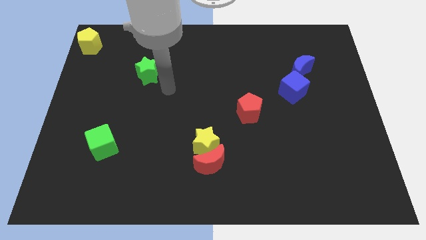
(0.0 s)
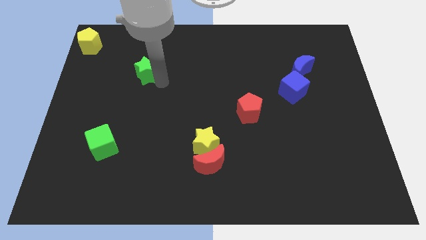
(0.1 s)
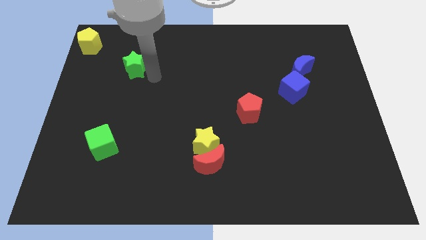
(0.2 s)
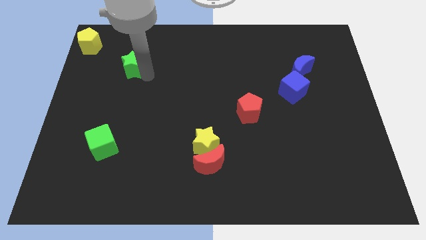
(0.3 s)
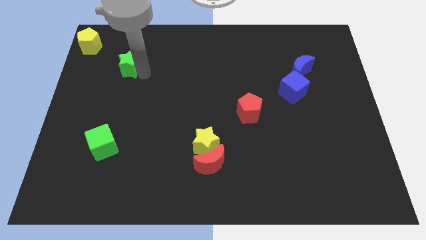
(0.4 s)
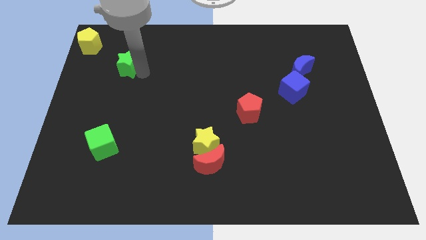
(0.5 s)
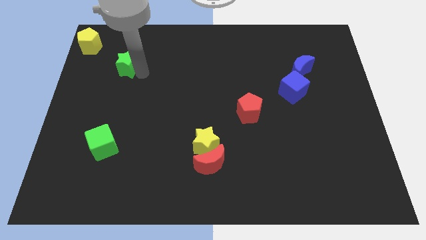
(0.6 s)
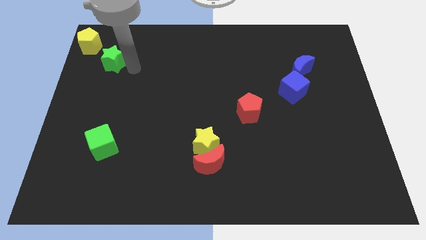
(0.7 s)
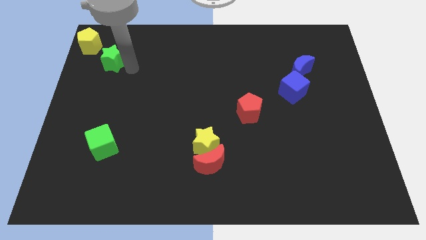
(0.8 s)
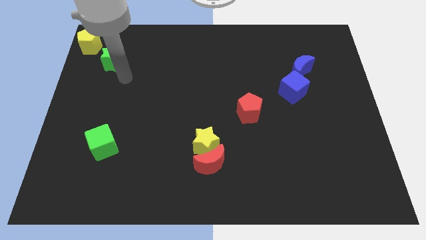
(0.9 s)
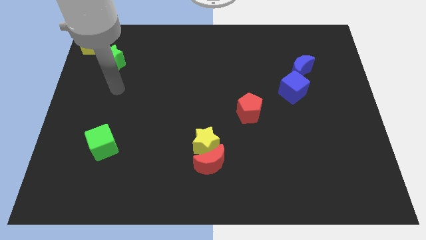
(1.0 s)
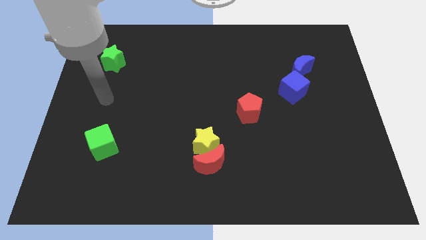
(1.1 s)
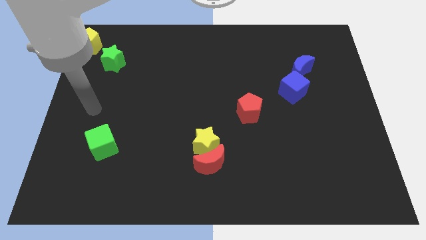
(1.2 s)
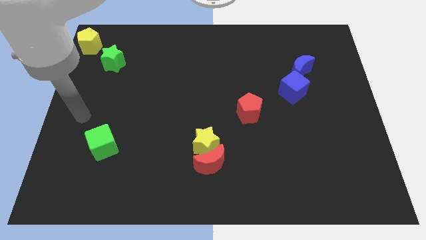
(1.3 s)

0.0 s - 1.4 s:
push the green star towards the yellow pentagon

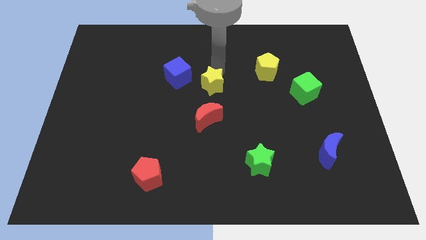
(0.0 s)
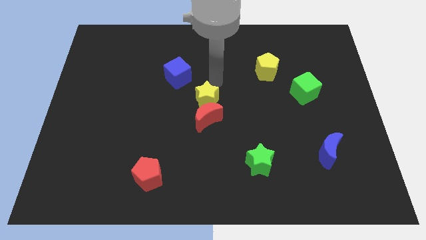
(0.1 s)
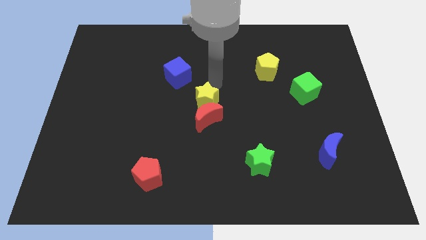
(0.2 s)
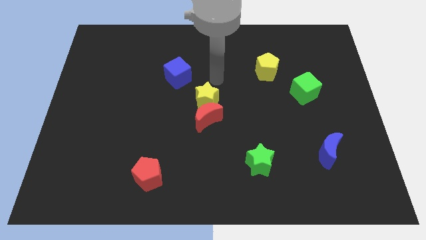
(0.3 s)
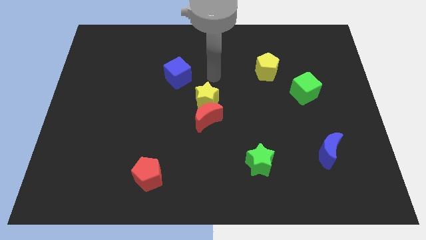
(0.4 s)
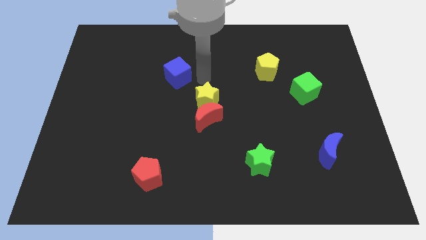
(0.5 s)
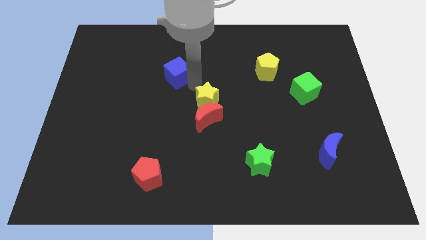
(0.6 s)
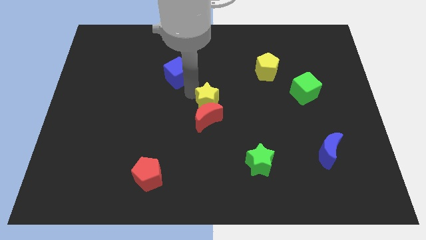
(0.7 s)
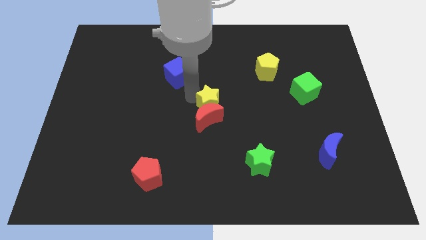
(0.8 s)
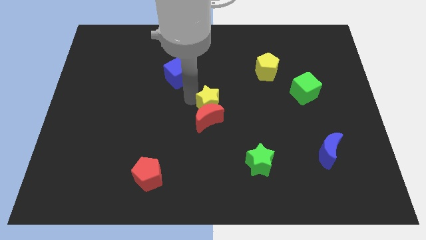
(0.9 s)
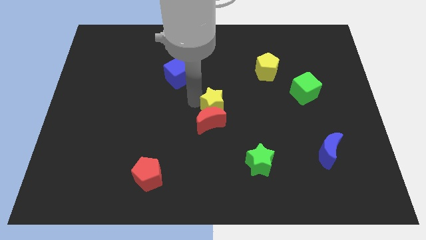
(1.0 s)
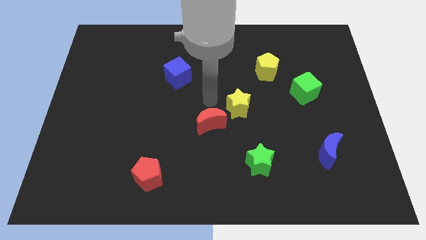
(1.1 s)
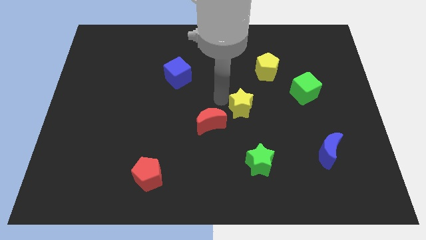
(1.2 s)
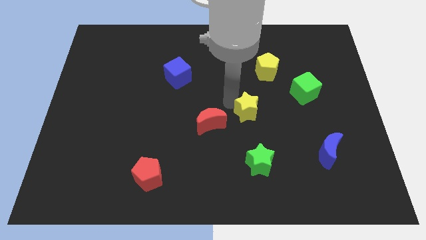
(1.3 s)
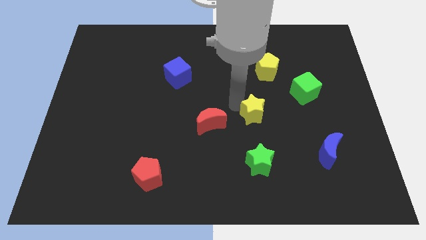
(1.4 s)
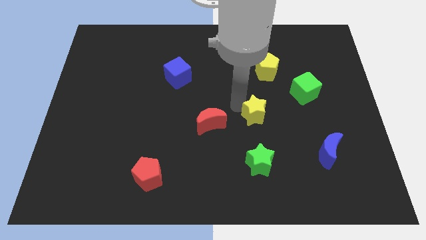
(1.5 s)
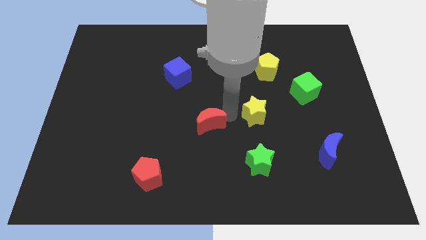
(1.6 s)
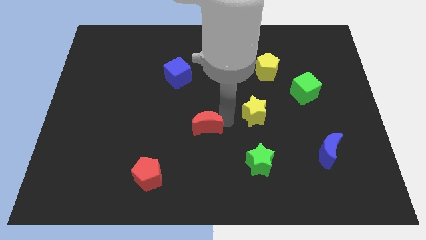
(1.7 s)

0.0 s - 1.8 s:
move yellow star right beside red moon

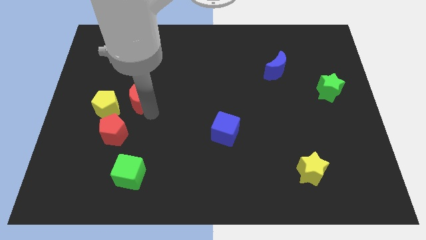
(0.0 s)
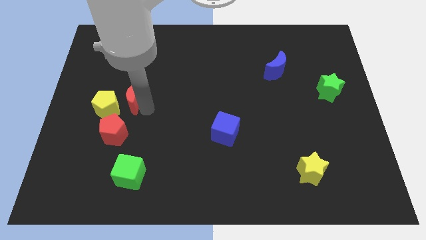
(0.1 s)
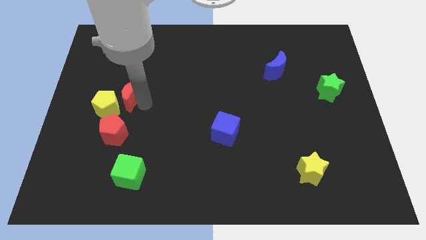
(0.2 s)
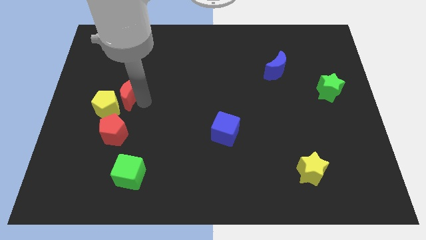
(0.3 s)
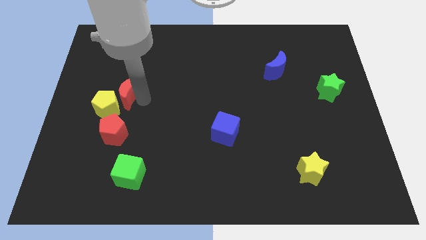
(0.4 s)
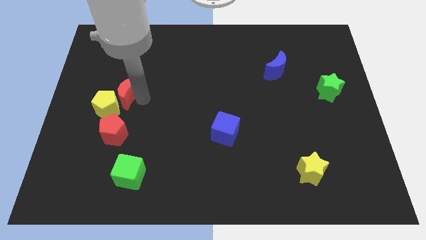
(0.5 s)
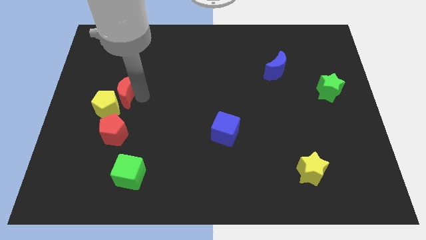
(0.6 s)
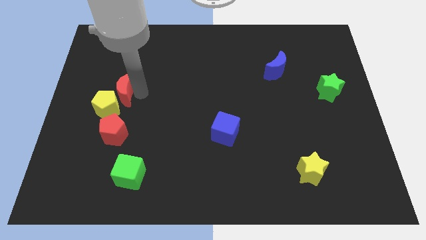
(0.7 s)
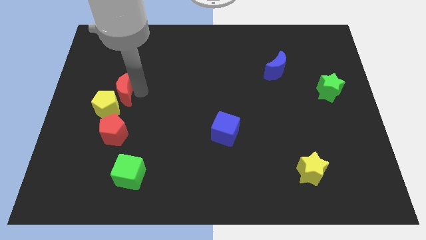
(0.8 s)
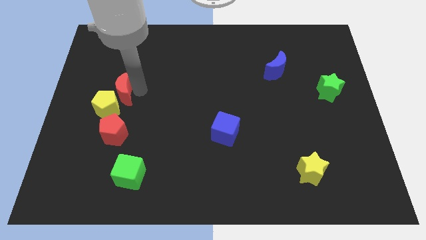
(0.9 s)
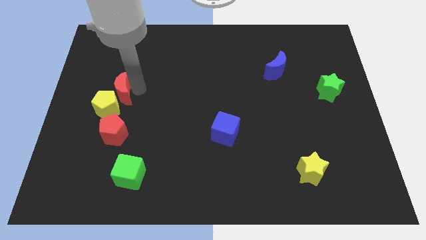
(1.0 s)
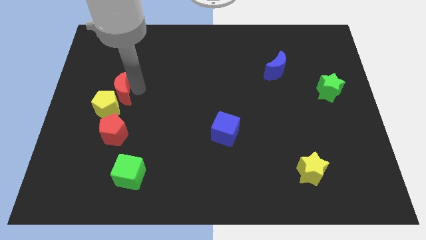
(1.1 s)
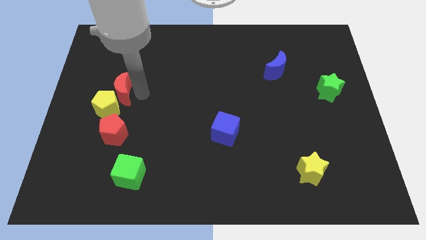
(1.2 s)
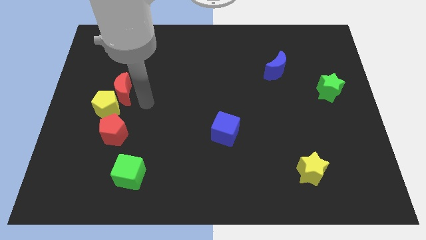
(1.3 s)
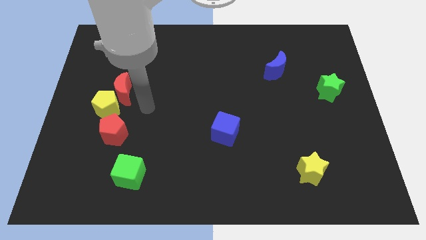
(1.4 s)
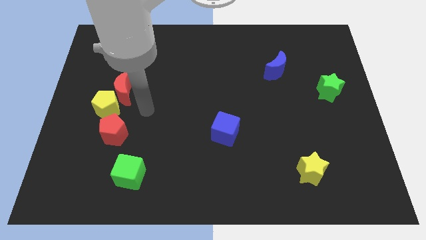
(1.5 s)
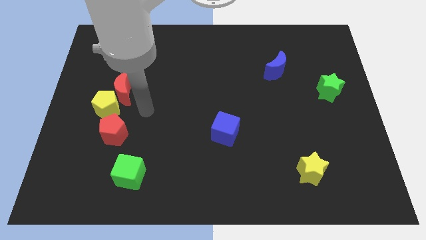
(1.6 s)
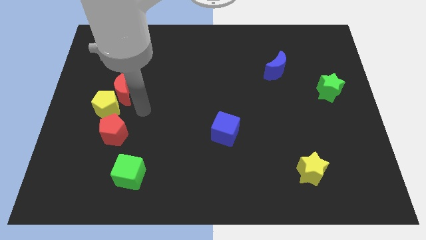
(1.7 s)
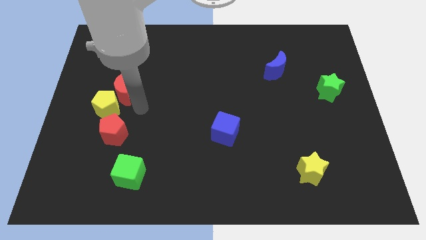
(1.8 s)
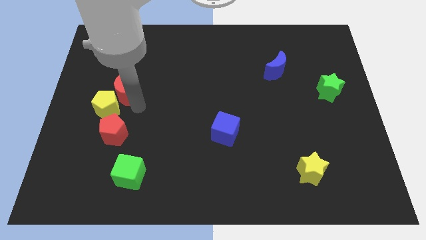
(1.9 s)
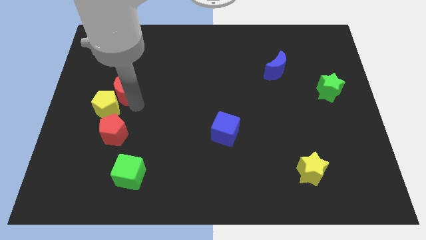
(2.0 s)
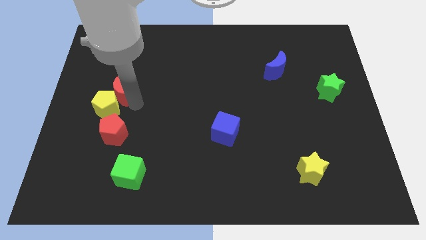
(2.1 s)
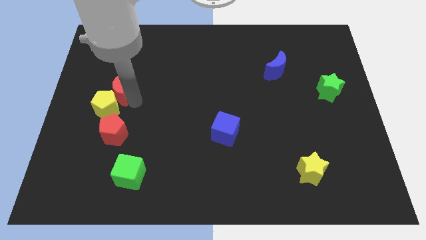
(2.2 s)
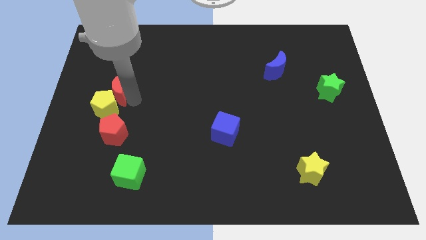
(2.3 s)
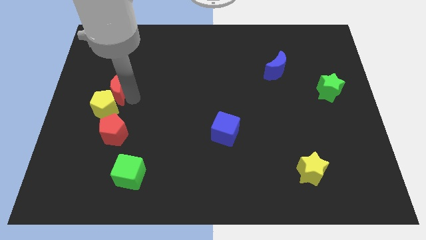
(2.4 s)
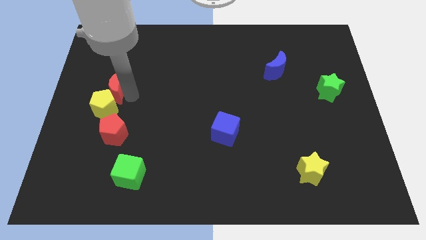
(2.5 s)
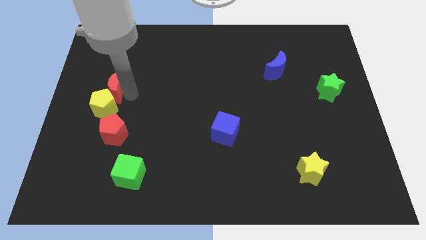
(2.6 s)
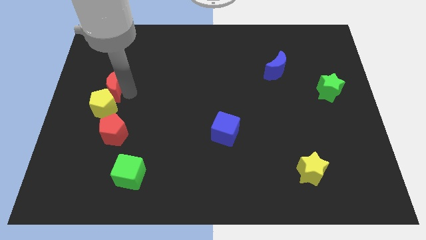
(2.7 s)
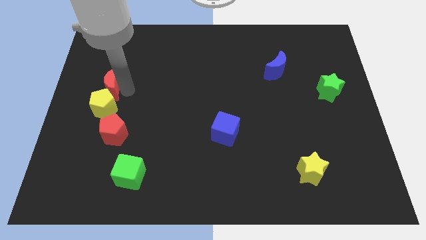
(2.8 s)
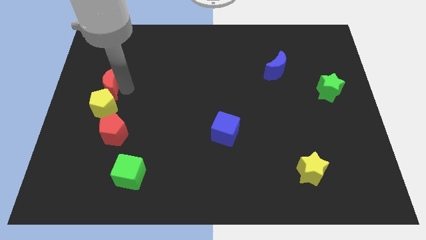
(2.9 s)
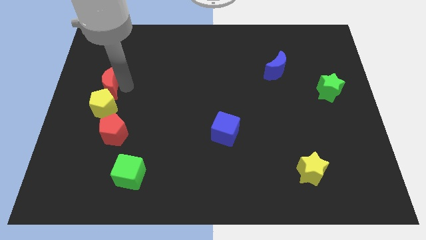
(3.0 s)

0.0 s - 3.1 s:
place the red crescent to the top of the yellow pentagon

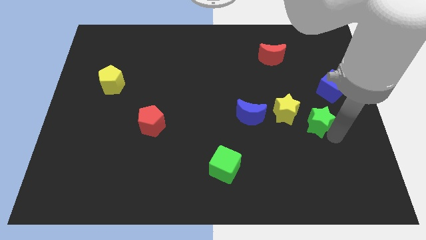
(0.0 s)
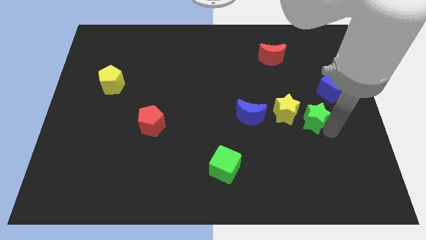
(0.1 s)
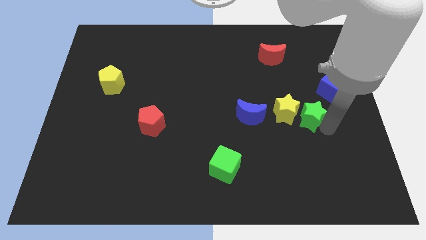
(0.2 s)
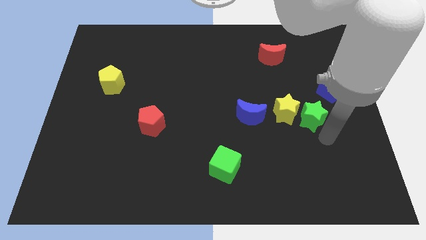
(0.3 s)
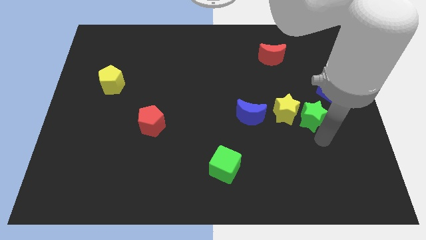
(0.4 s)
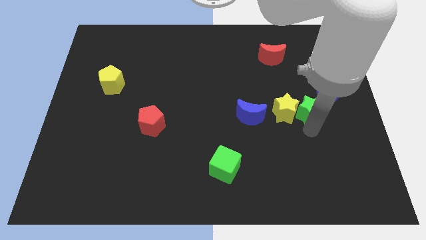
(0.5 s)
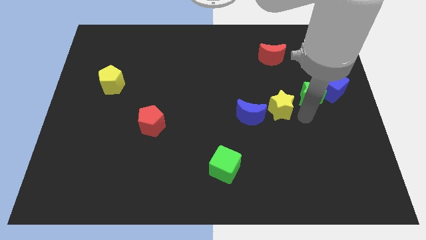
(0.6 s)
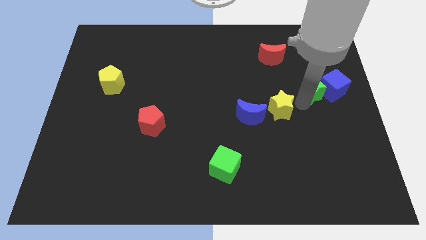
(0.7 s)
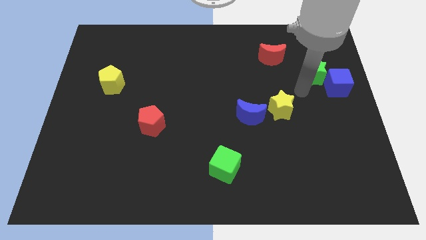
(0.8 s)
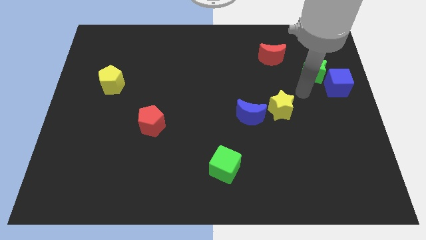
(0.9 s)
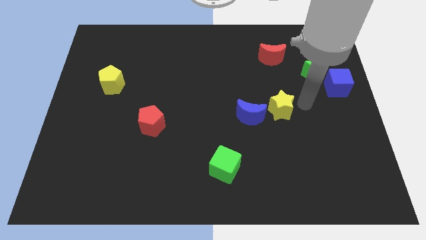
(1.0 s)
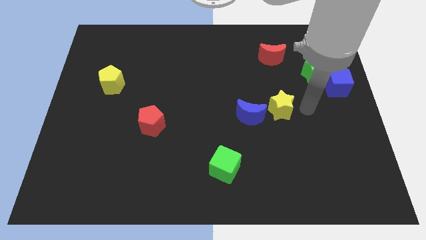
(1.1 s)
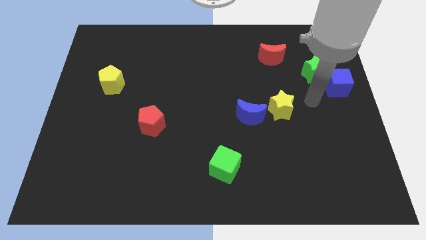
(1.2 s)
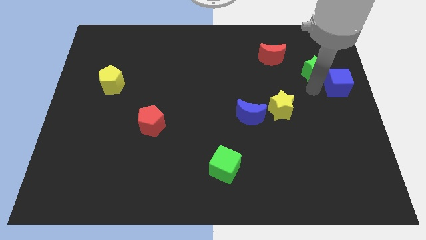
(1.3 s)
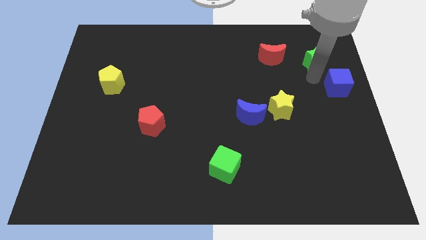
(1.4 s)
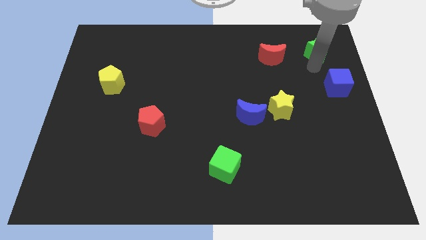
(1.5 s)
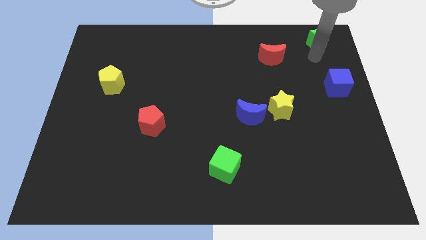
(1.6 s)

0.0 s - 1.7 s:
place the green star to the right of the red crescent

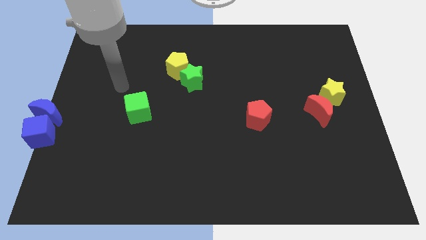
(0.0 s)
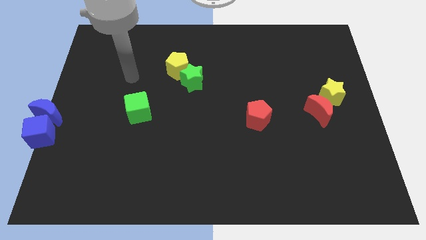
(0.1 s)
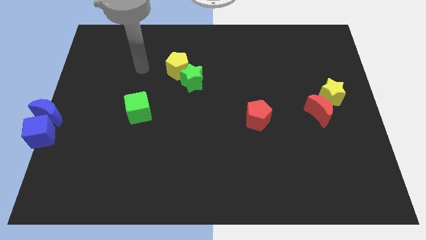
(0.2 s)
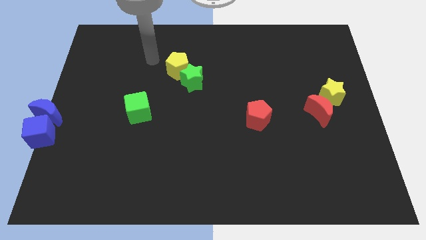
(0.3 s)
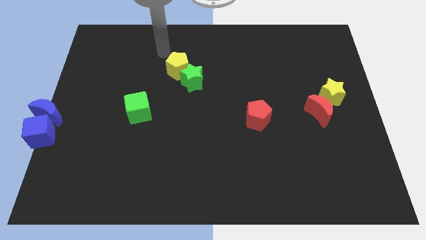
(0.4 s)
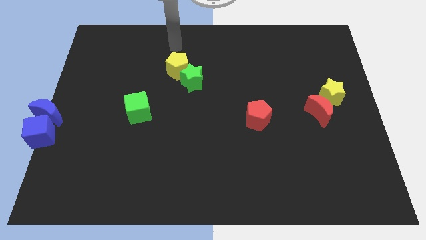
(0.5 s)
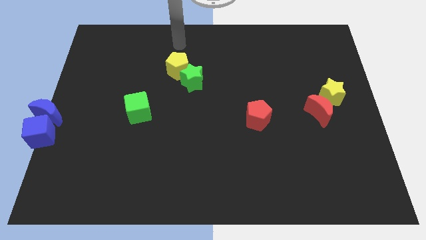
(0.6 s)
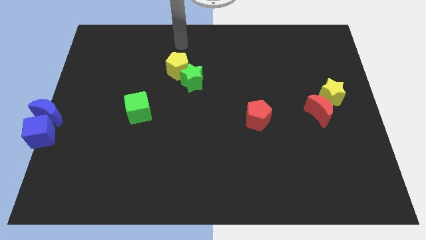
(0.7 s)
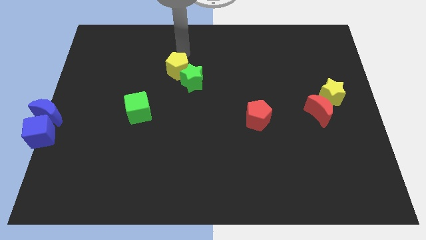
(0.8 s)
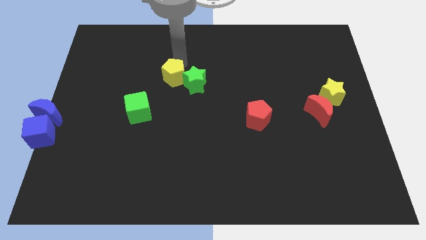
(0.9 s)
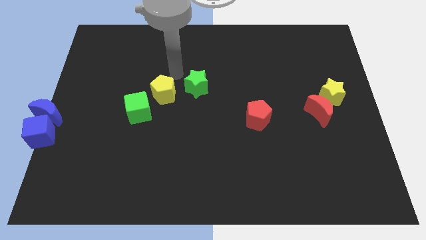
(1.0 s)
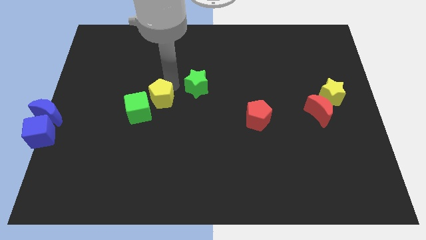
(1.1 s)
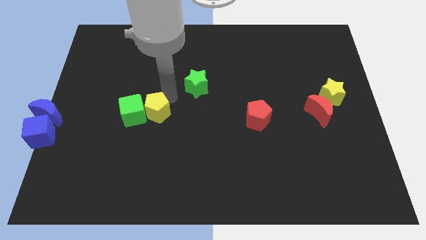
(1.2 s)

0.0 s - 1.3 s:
push yellow pentagon to the right of the green cube
